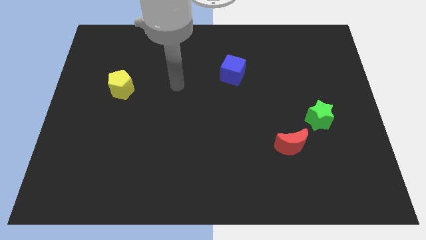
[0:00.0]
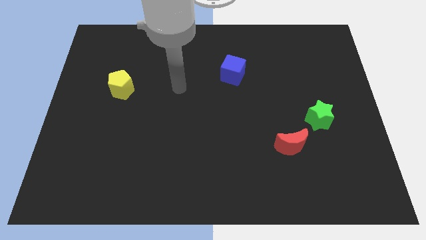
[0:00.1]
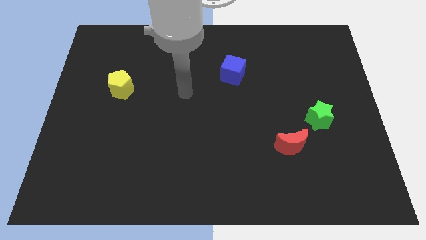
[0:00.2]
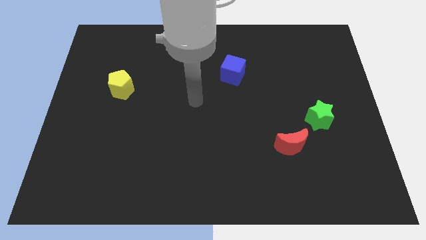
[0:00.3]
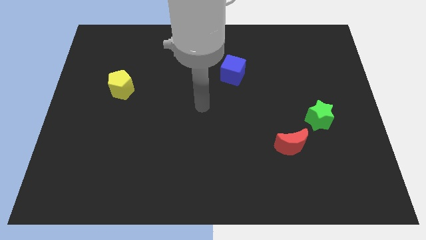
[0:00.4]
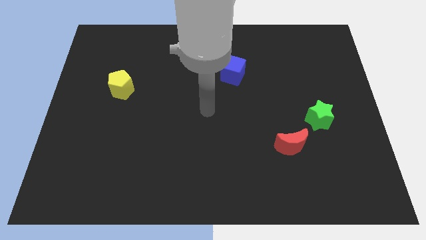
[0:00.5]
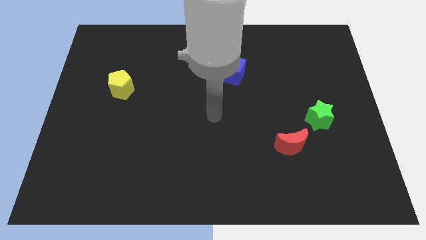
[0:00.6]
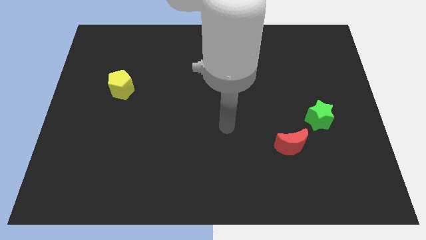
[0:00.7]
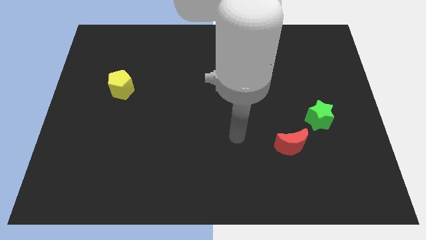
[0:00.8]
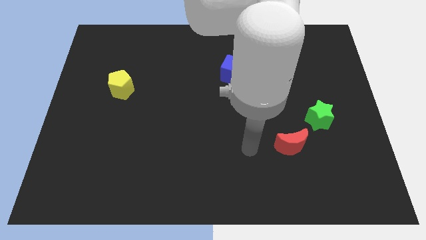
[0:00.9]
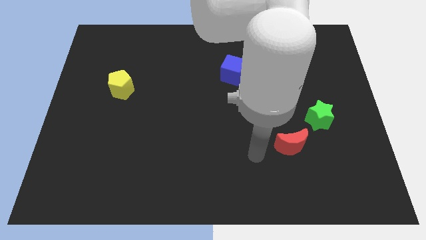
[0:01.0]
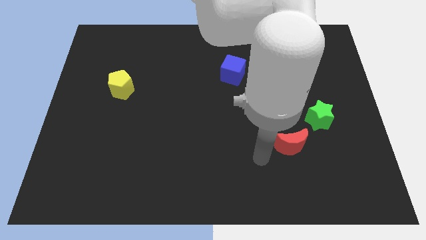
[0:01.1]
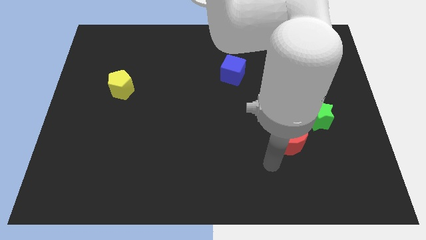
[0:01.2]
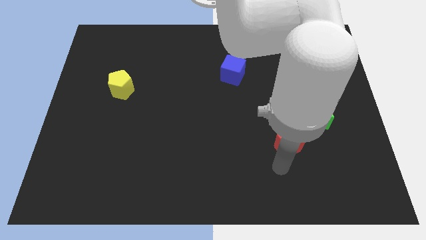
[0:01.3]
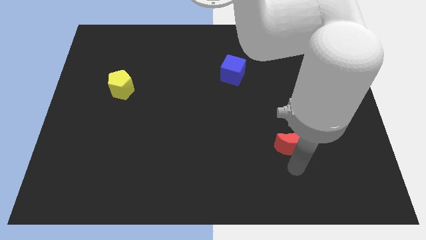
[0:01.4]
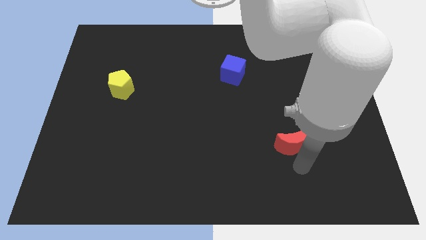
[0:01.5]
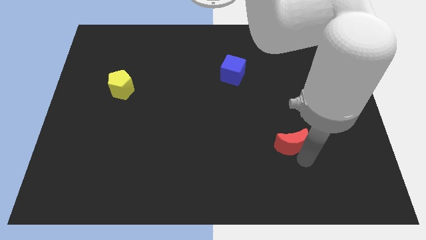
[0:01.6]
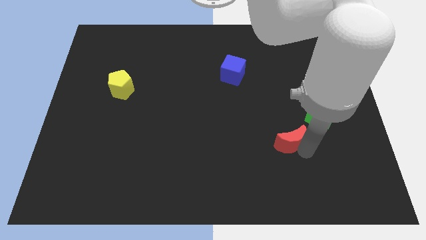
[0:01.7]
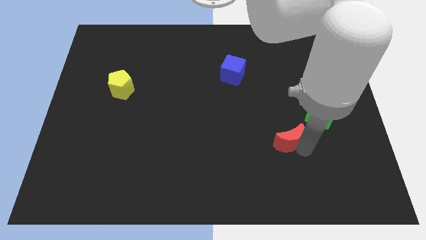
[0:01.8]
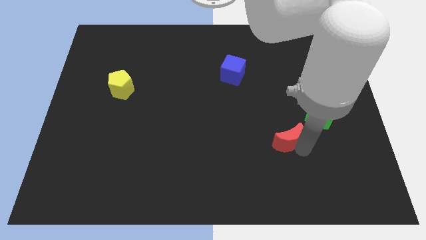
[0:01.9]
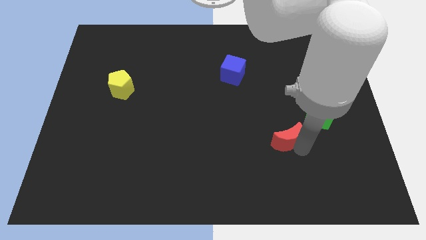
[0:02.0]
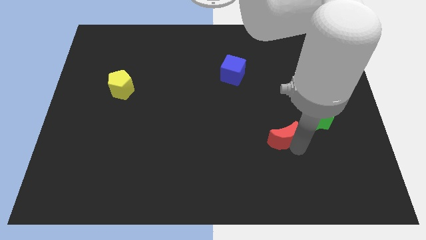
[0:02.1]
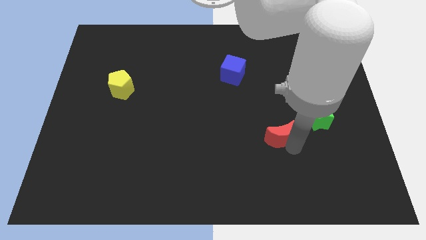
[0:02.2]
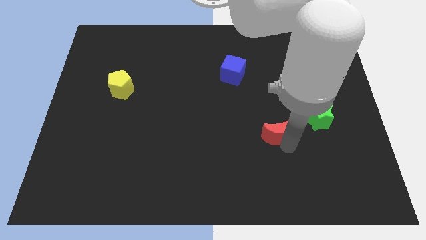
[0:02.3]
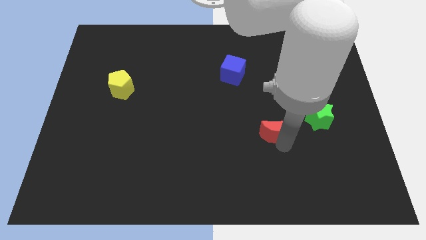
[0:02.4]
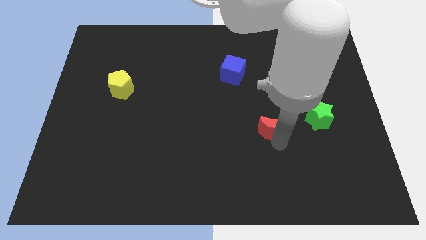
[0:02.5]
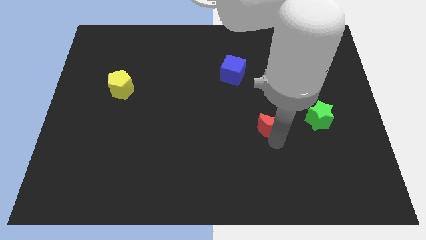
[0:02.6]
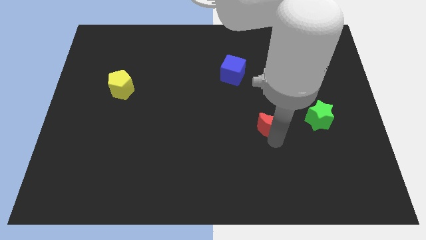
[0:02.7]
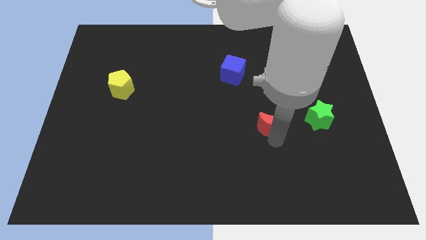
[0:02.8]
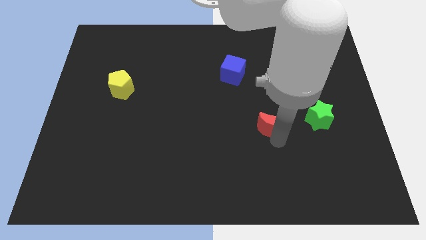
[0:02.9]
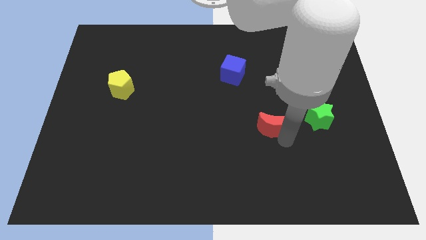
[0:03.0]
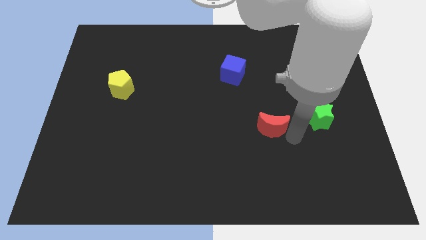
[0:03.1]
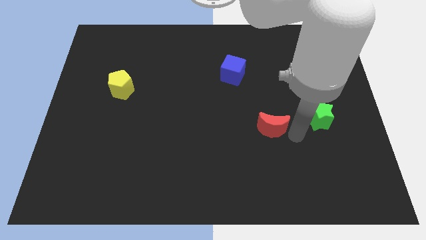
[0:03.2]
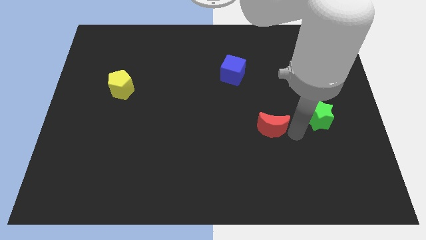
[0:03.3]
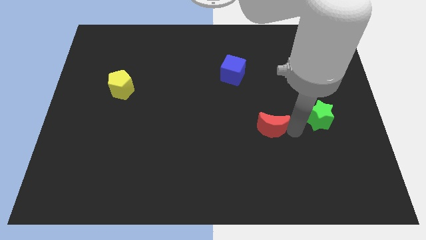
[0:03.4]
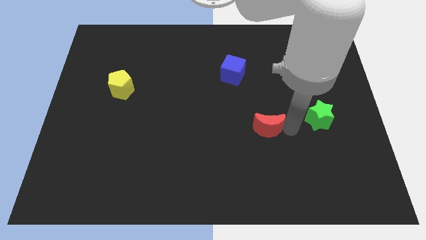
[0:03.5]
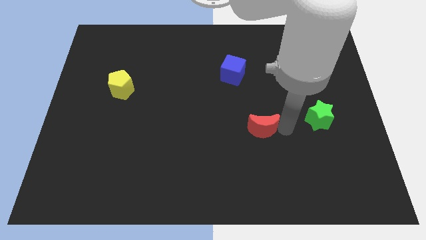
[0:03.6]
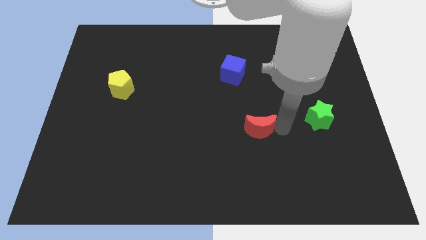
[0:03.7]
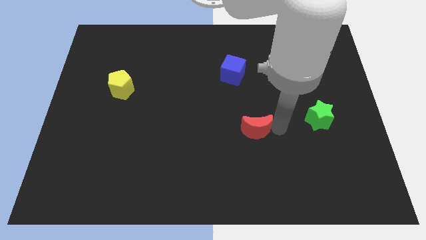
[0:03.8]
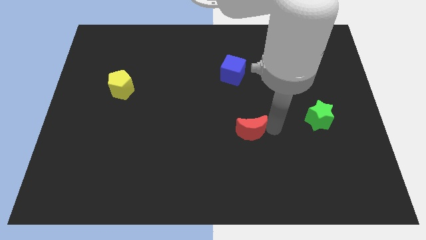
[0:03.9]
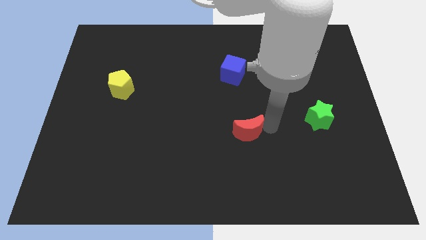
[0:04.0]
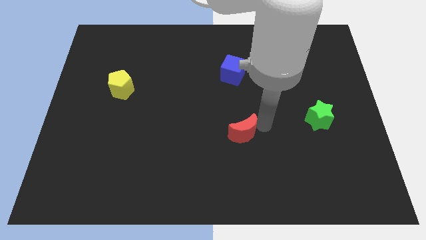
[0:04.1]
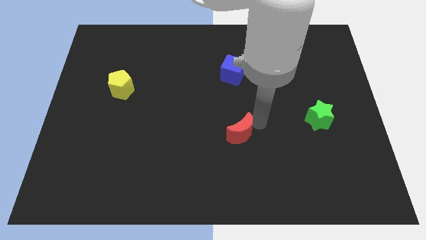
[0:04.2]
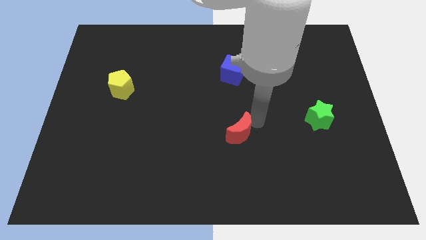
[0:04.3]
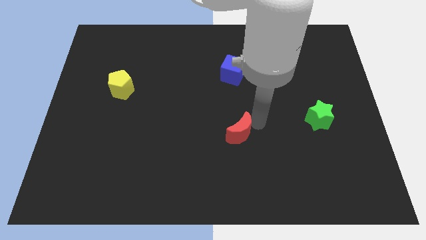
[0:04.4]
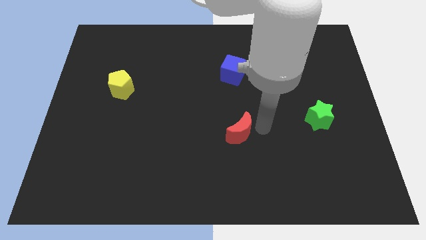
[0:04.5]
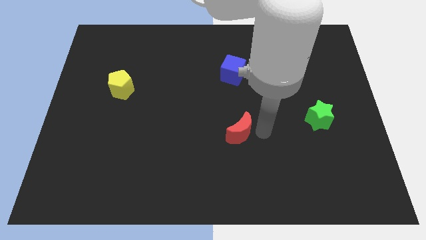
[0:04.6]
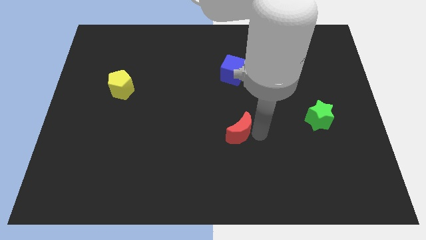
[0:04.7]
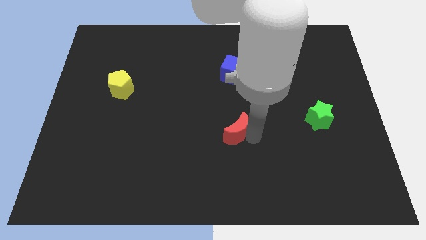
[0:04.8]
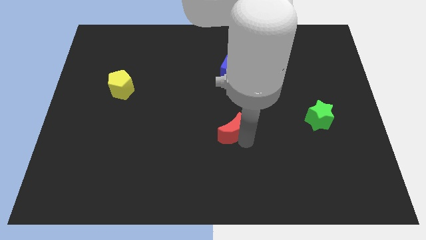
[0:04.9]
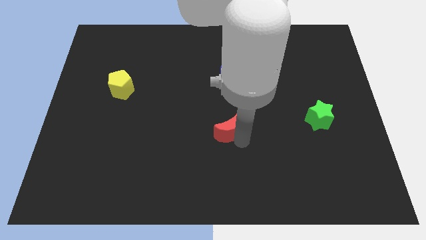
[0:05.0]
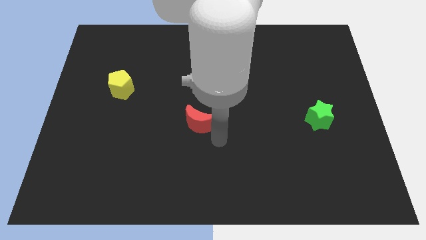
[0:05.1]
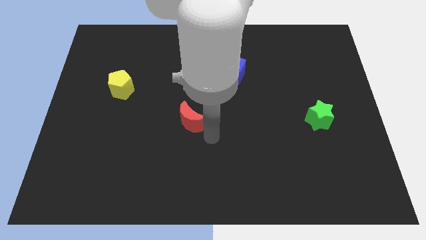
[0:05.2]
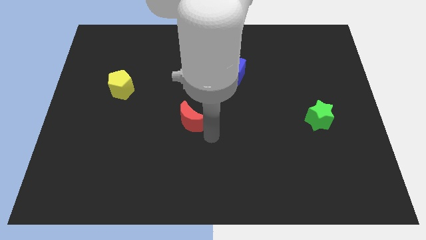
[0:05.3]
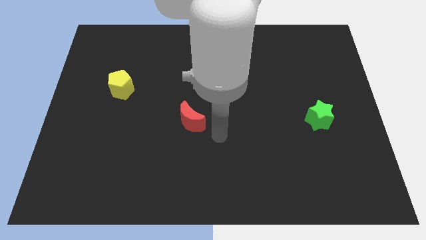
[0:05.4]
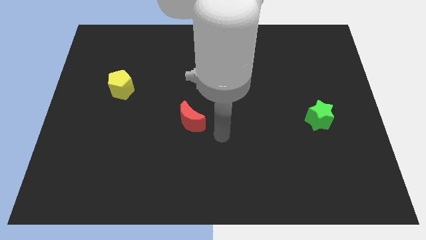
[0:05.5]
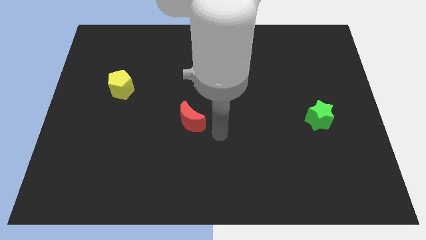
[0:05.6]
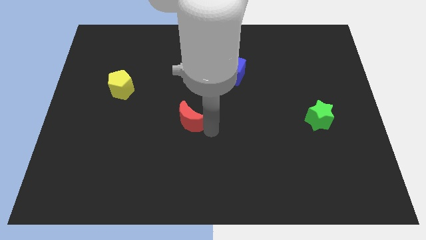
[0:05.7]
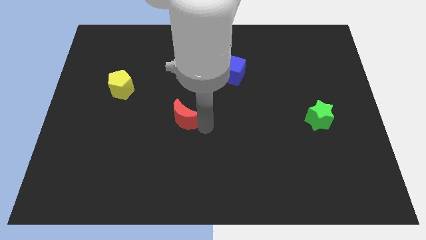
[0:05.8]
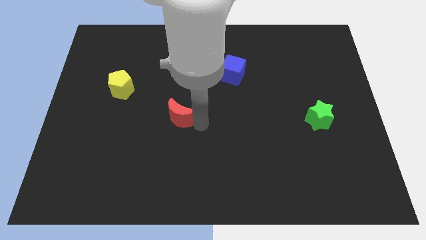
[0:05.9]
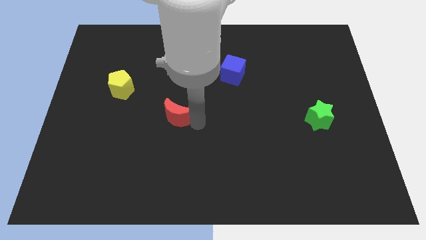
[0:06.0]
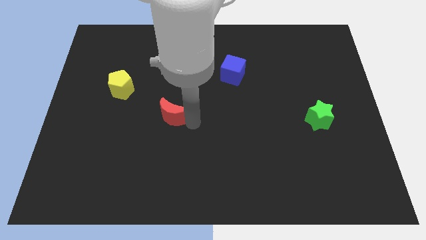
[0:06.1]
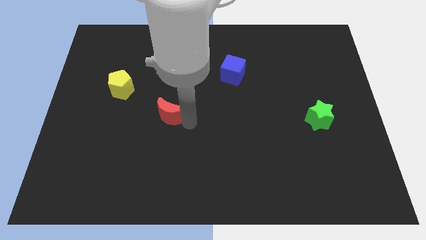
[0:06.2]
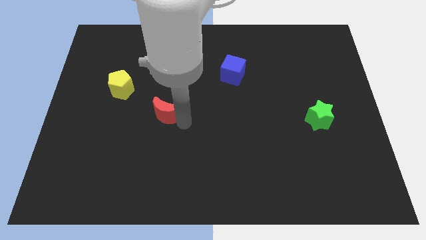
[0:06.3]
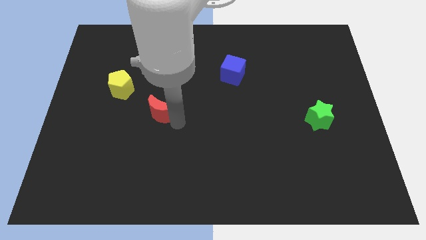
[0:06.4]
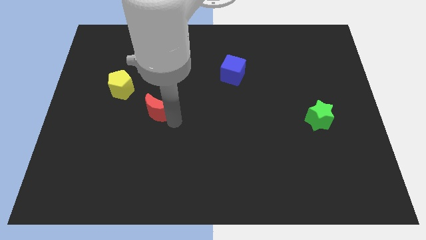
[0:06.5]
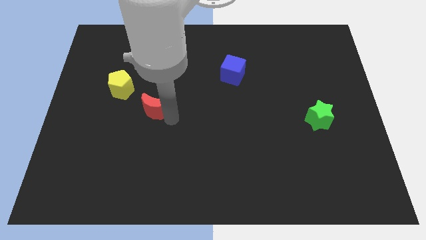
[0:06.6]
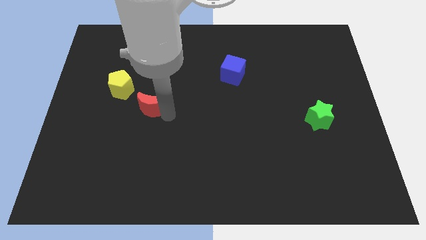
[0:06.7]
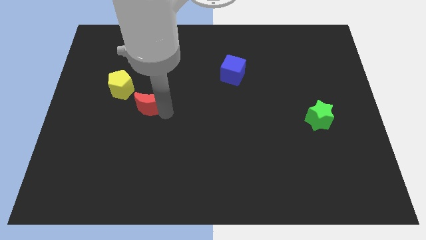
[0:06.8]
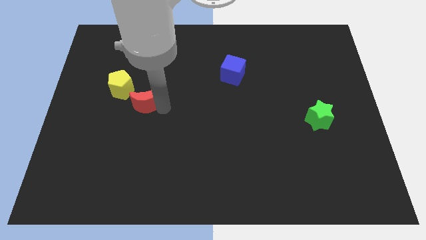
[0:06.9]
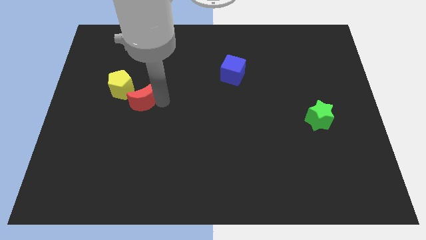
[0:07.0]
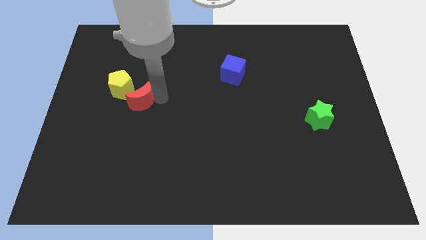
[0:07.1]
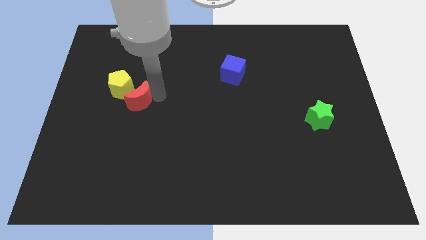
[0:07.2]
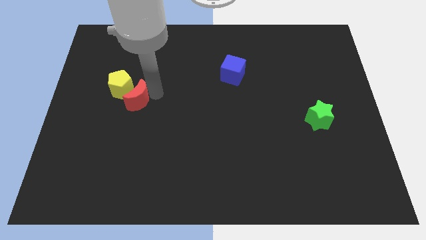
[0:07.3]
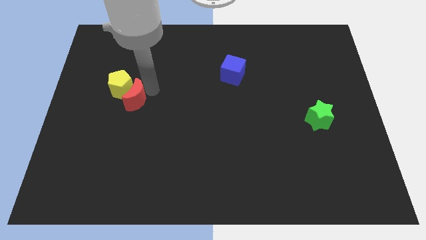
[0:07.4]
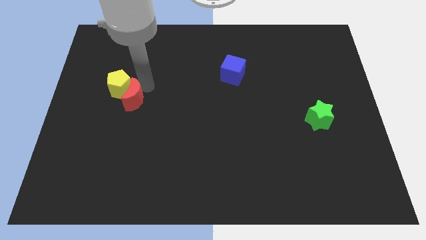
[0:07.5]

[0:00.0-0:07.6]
move the red moon close to the pentagon

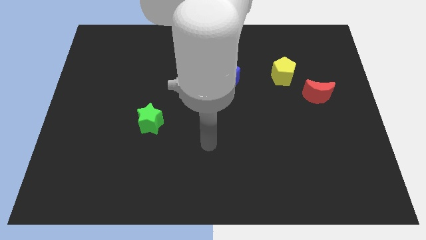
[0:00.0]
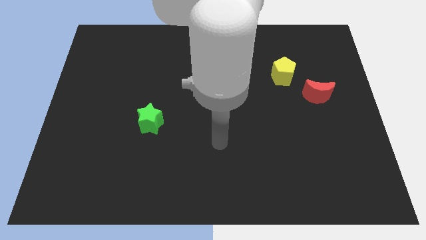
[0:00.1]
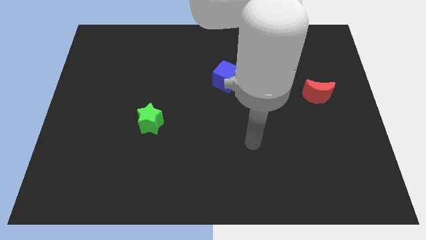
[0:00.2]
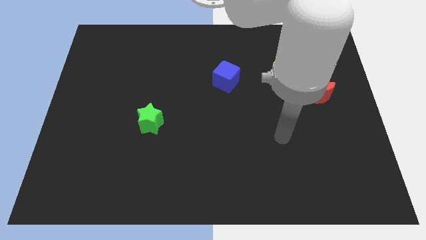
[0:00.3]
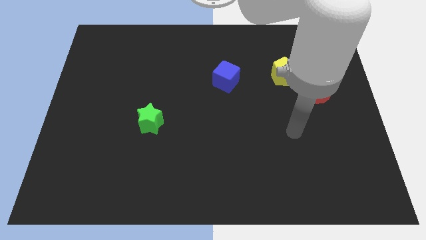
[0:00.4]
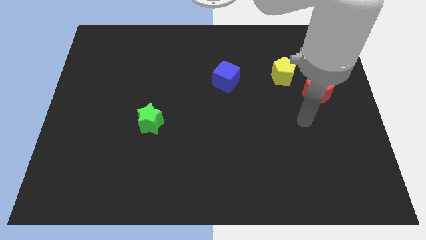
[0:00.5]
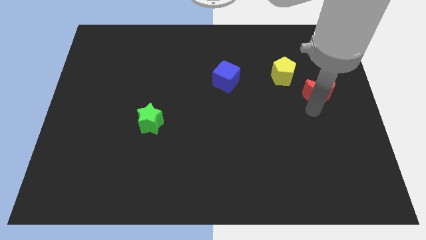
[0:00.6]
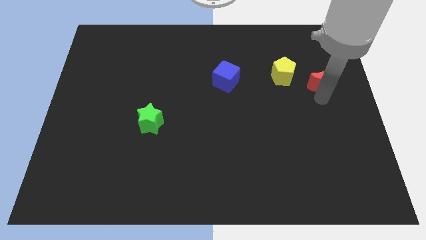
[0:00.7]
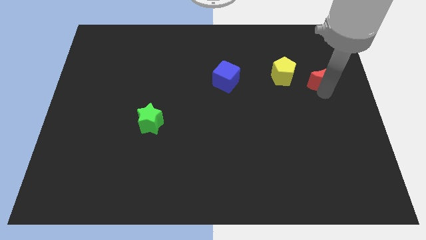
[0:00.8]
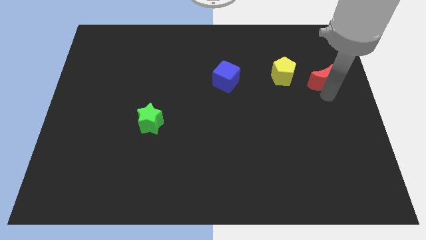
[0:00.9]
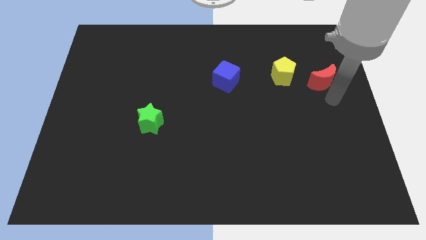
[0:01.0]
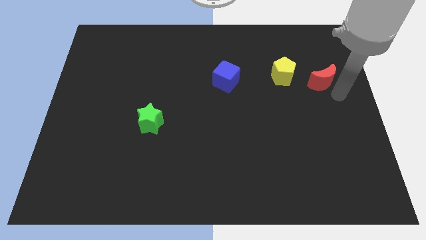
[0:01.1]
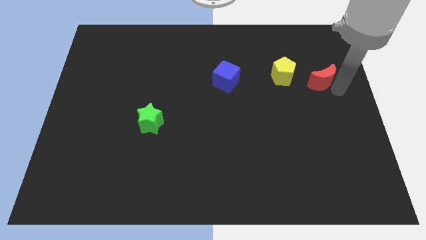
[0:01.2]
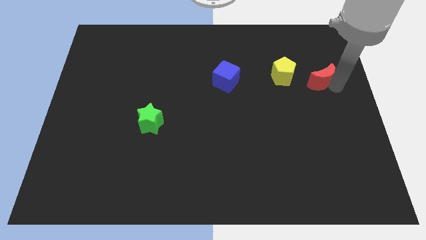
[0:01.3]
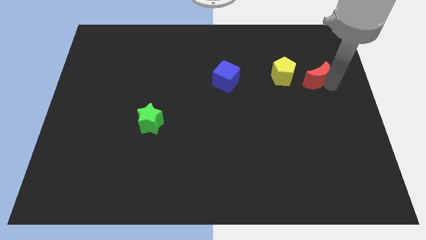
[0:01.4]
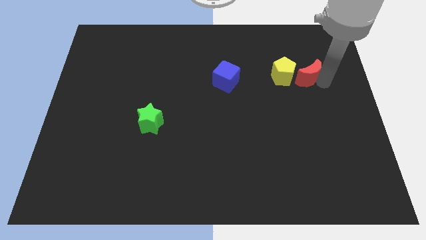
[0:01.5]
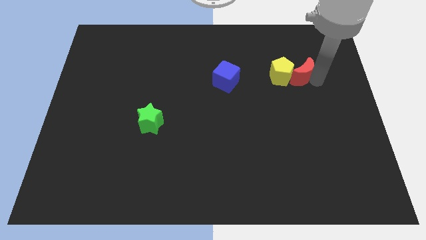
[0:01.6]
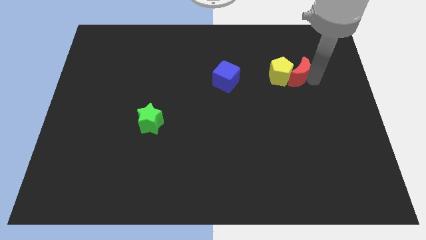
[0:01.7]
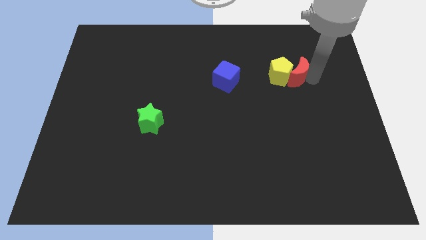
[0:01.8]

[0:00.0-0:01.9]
move the red block close to the yellow block
